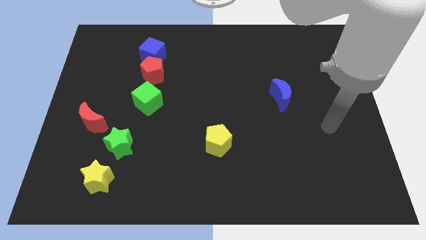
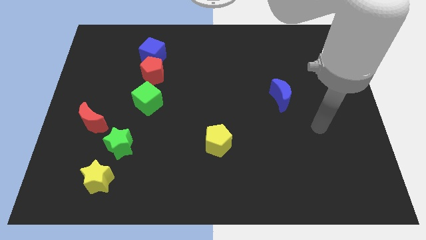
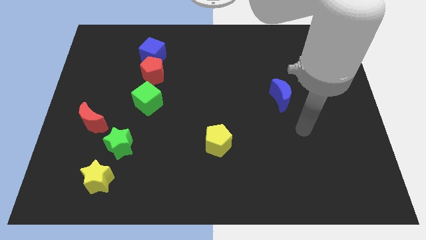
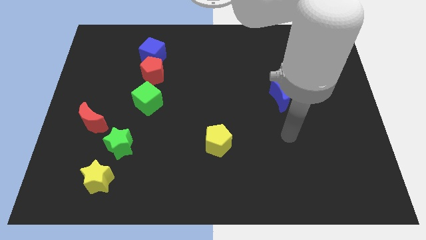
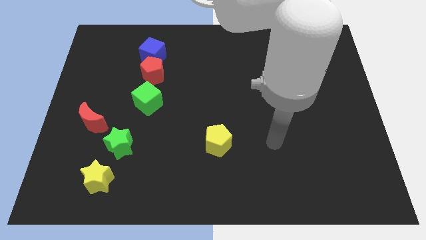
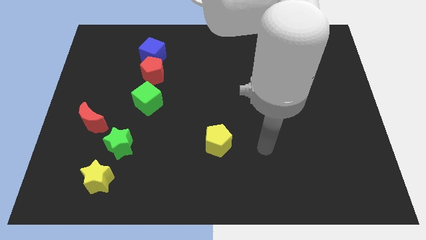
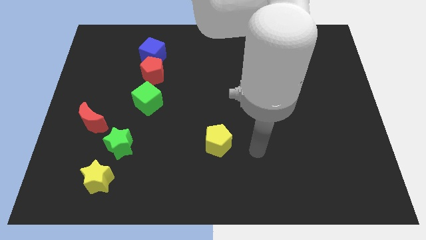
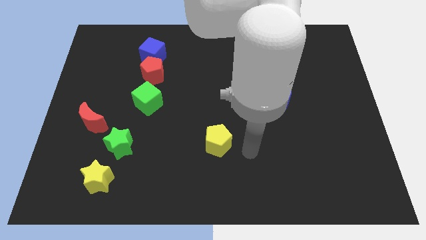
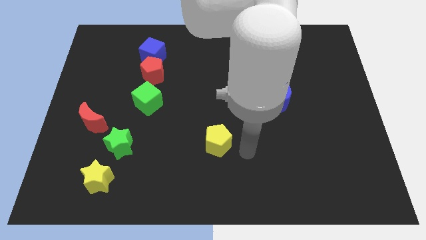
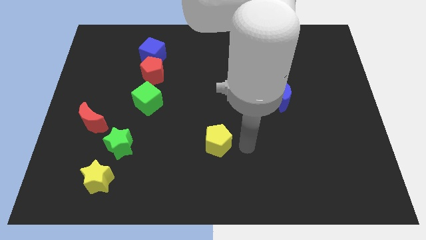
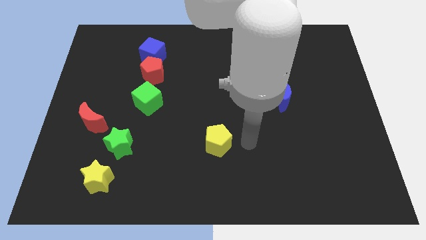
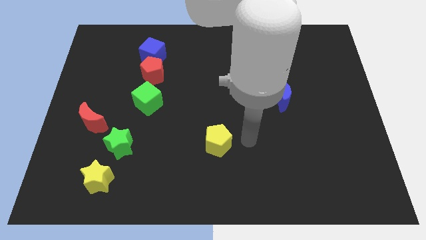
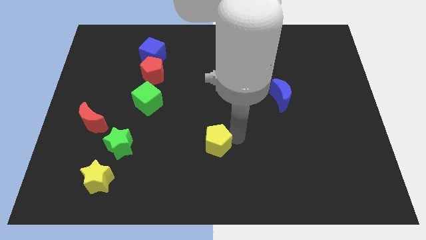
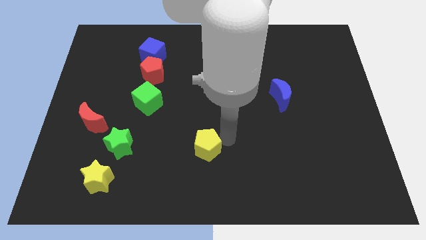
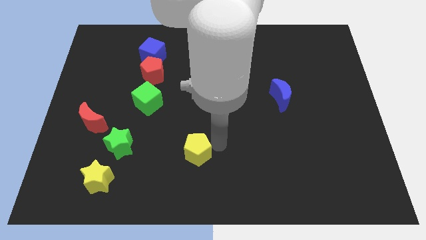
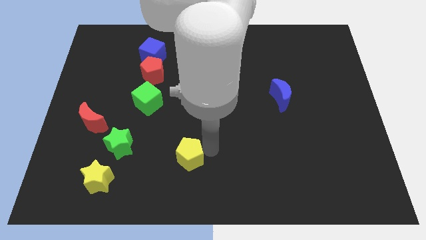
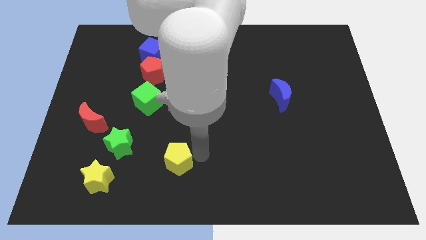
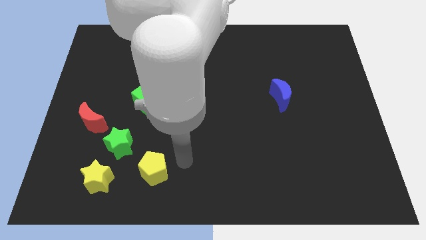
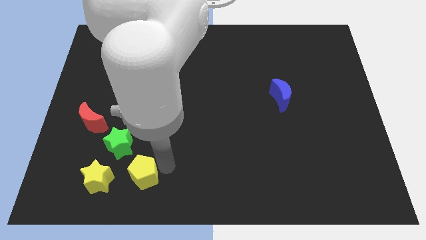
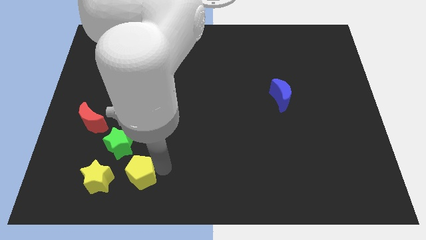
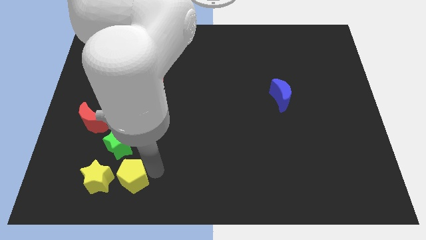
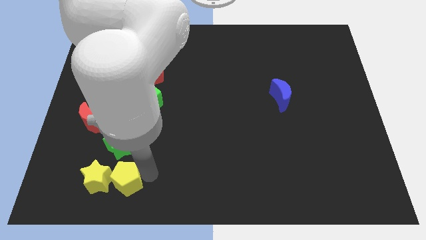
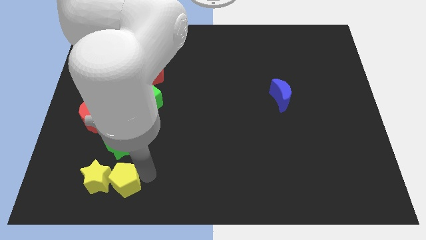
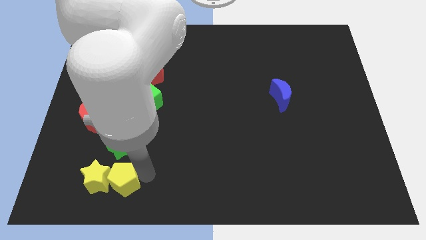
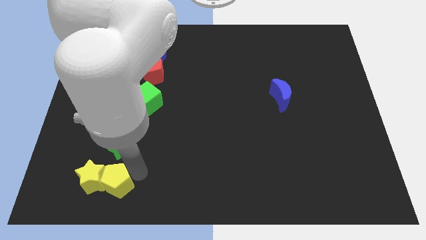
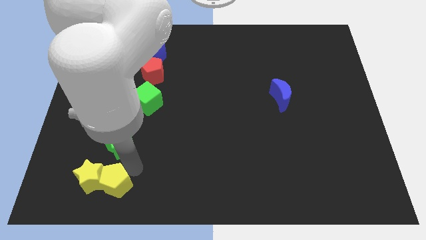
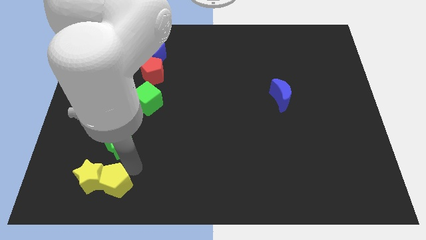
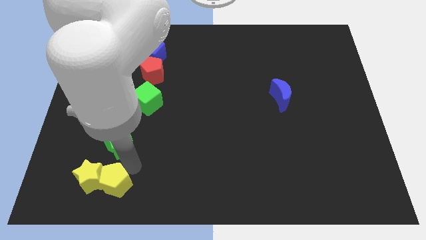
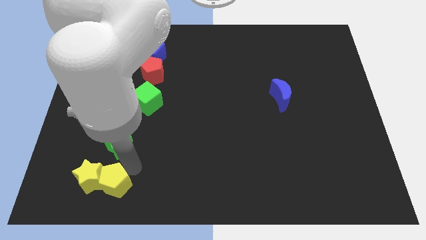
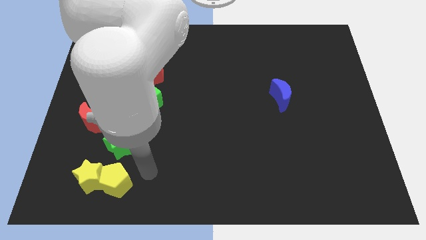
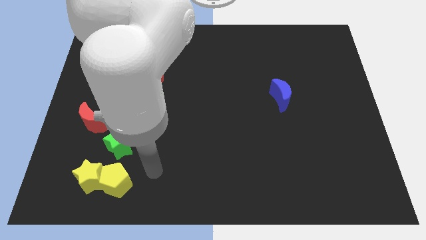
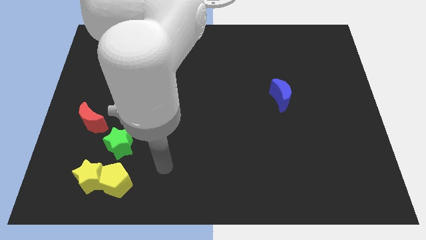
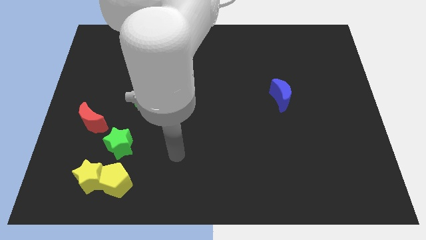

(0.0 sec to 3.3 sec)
push the yellow pentagon into the yellow star

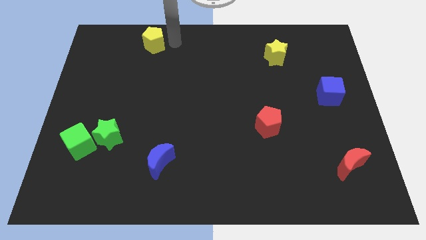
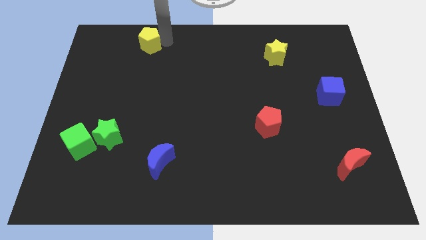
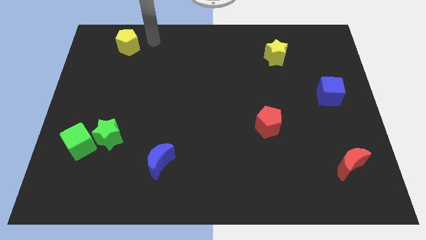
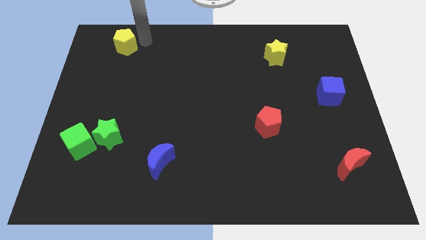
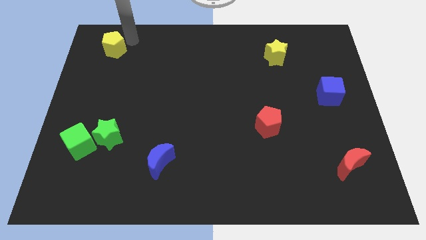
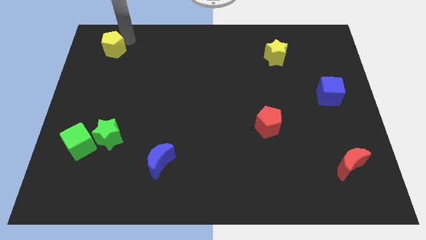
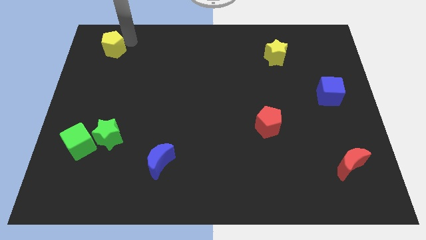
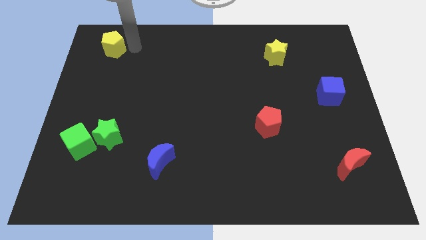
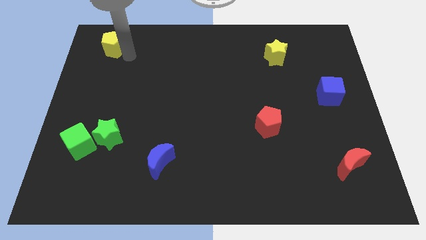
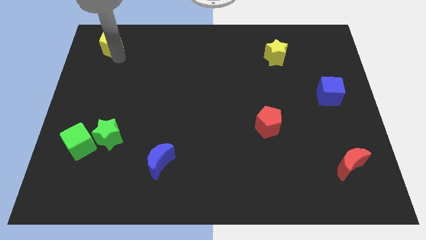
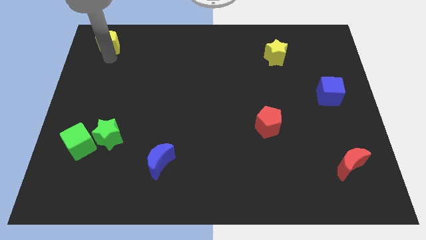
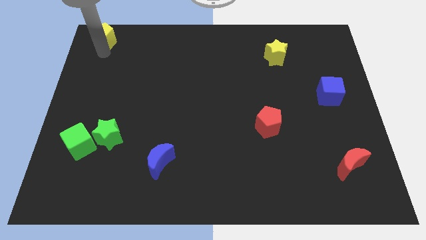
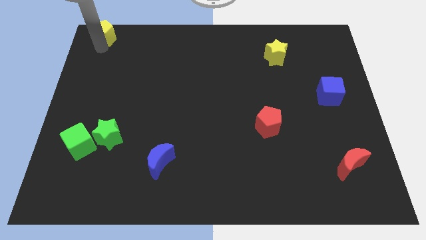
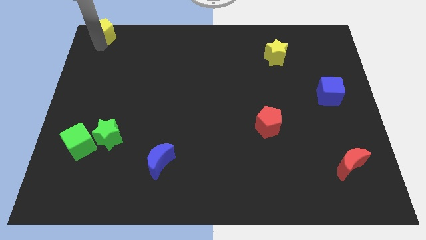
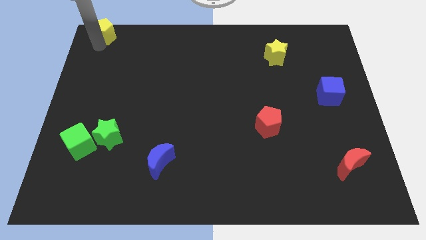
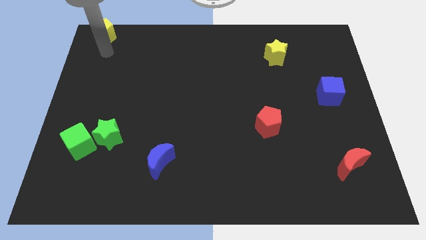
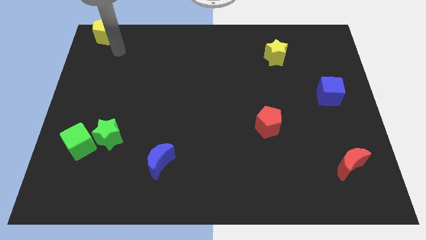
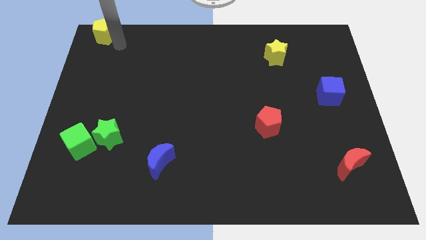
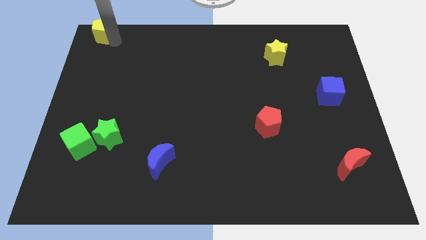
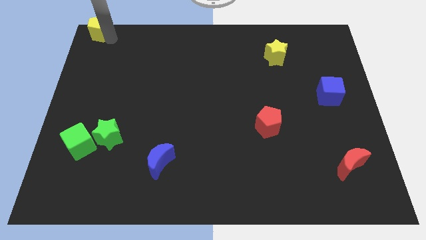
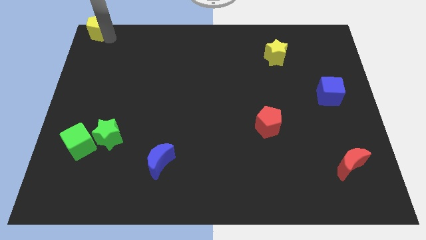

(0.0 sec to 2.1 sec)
push the yellow pentagon to the top left of the board

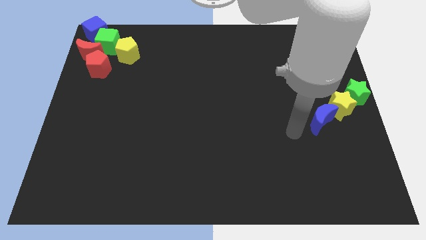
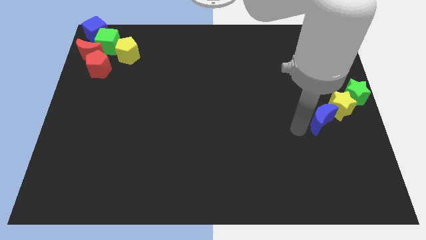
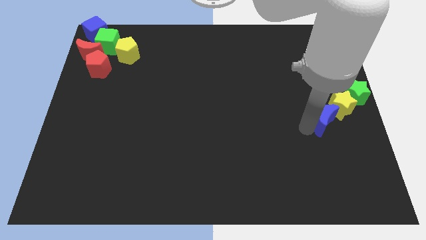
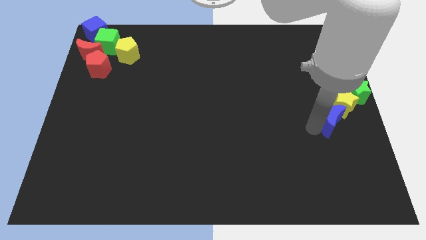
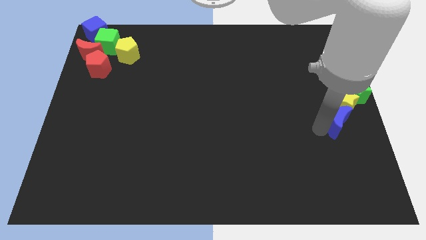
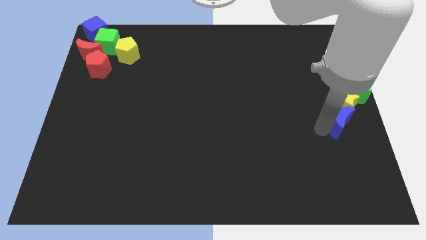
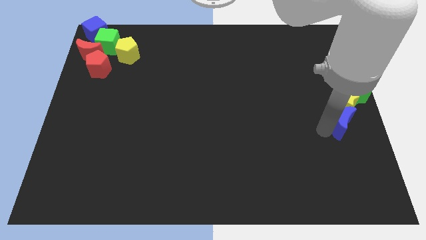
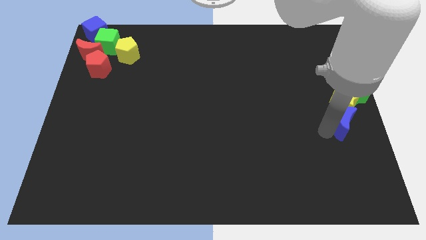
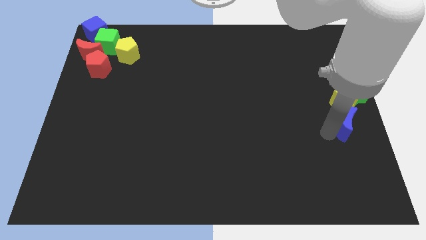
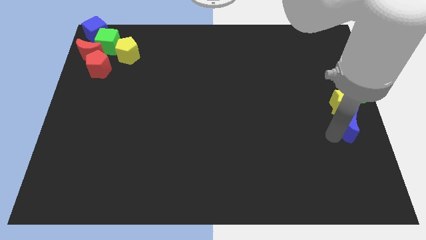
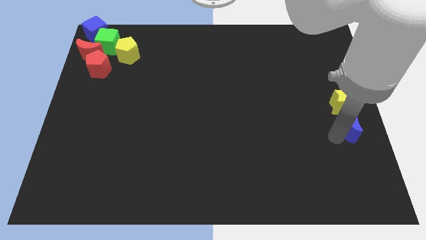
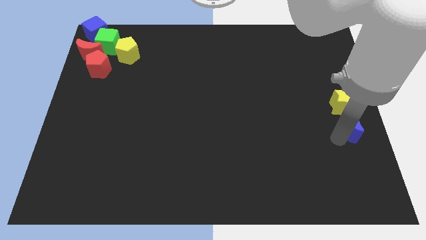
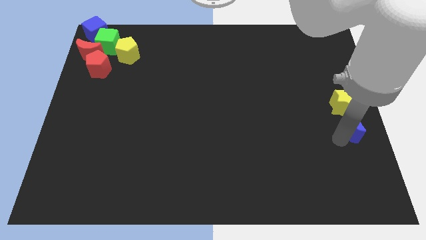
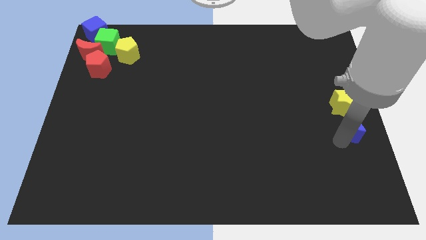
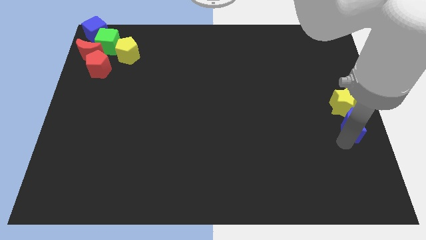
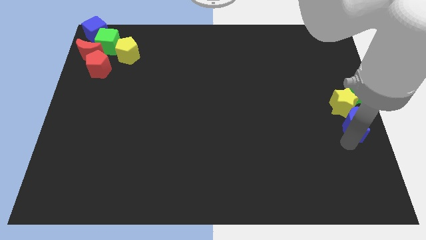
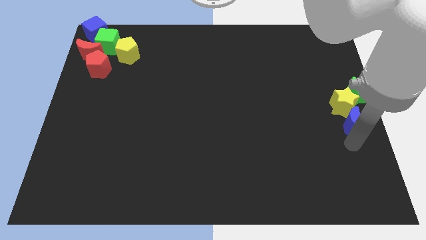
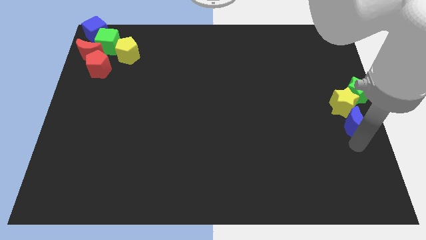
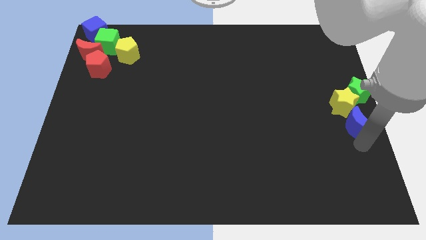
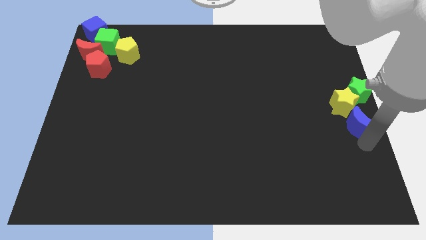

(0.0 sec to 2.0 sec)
move blue crescent slightly to the right side

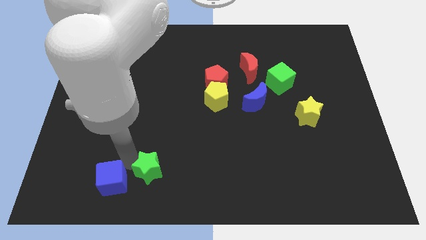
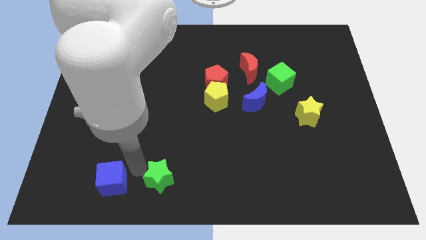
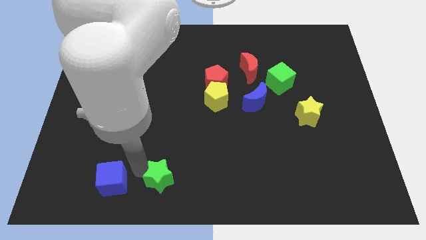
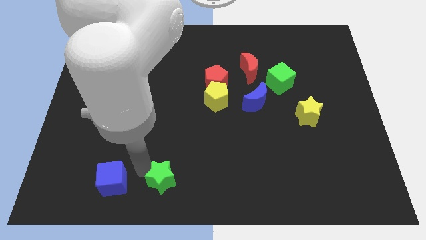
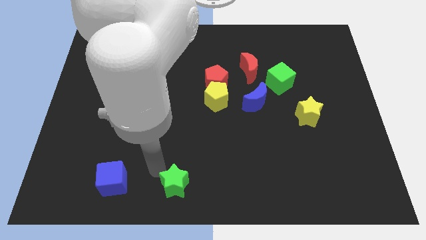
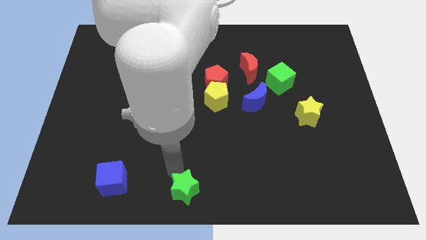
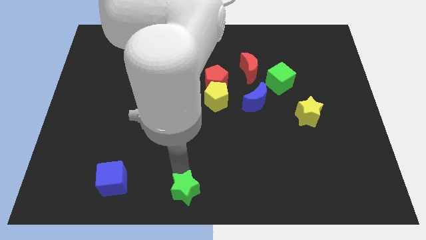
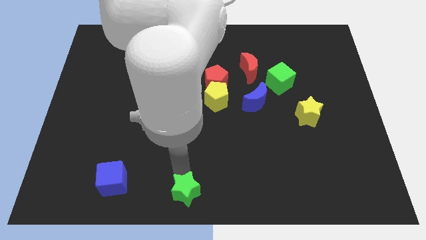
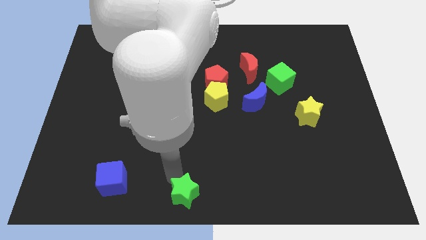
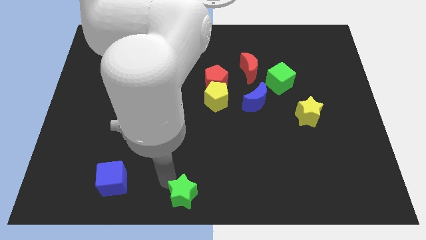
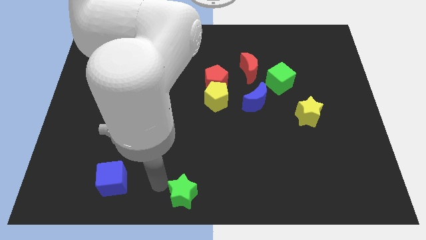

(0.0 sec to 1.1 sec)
push the green star to the bottom center of the board

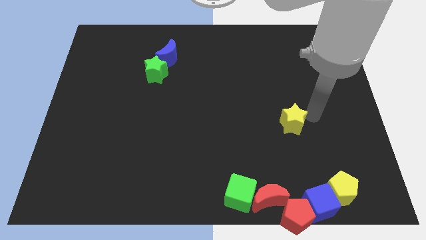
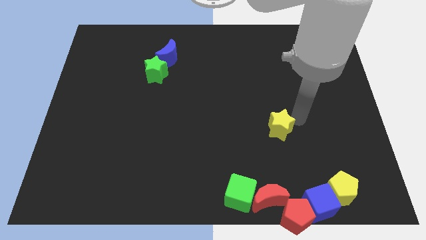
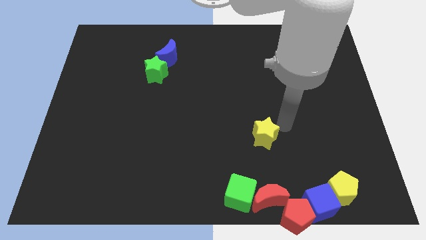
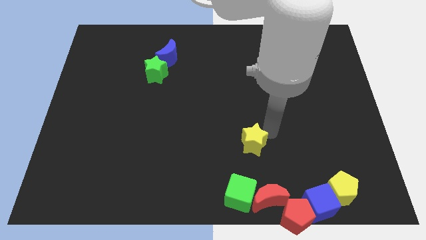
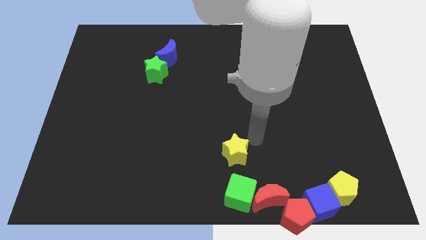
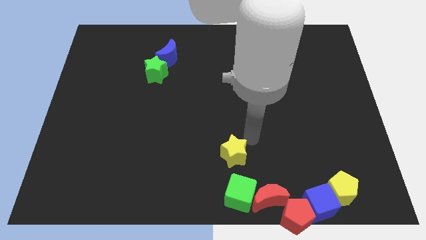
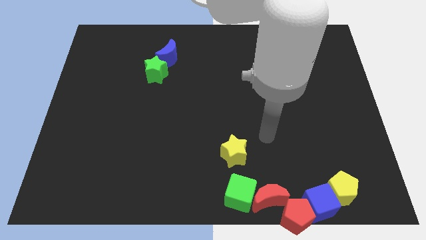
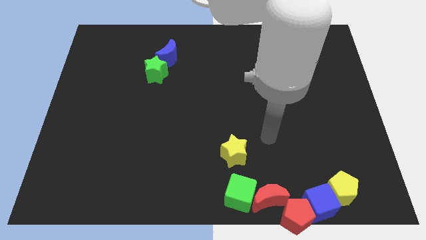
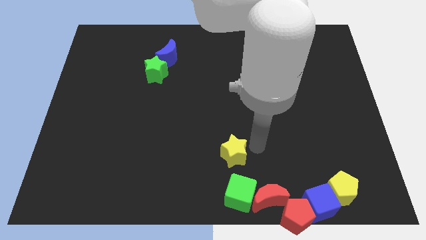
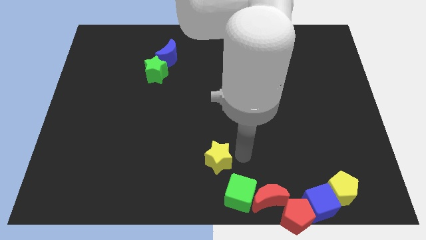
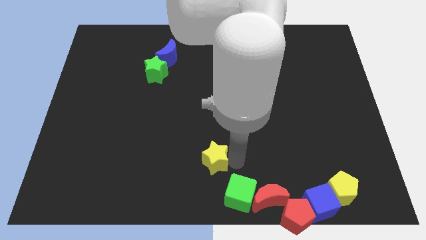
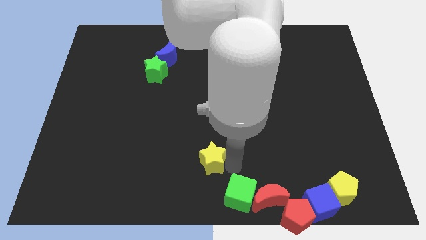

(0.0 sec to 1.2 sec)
slide the yellow star to the left side of the board
